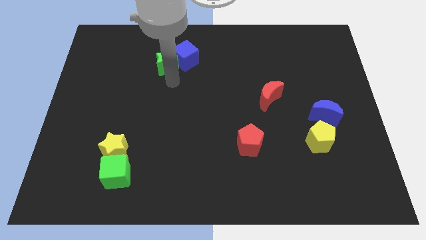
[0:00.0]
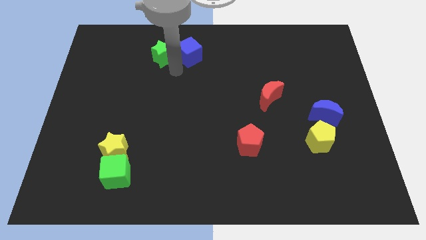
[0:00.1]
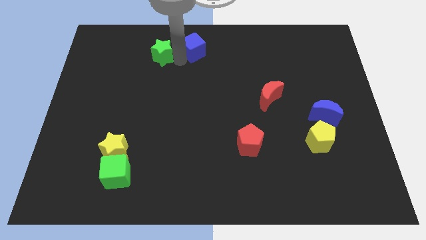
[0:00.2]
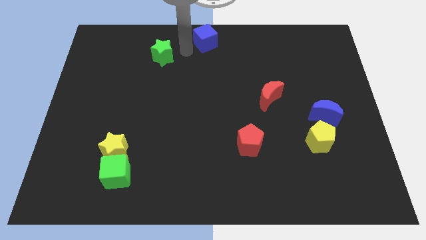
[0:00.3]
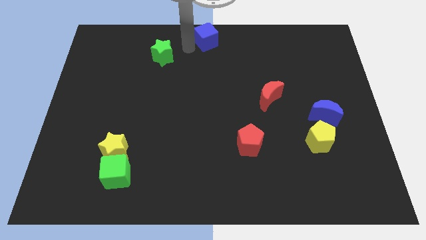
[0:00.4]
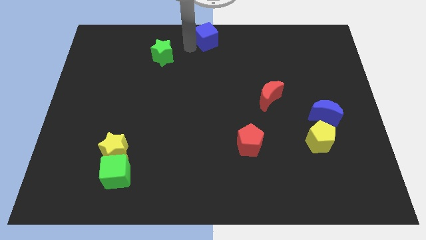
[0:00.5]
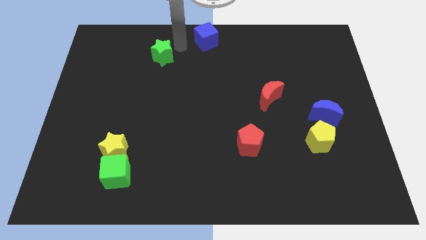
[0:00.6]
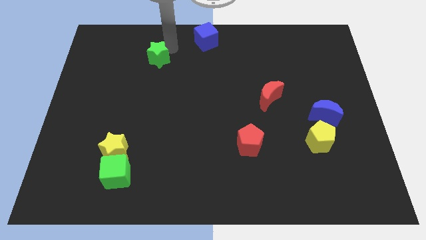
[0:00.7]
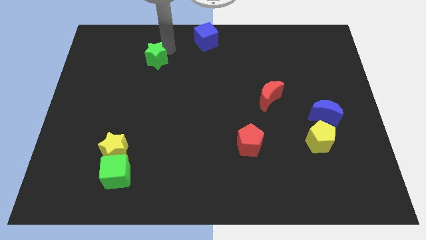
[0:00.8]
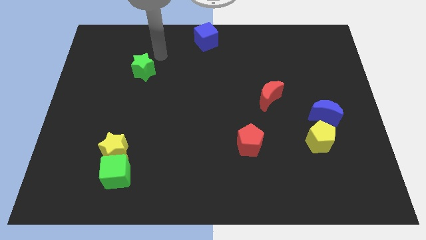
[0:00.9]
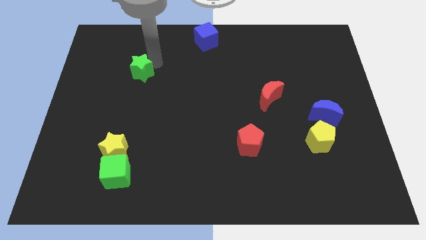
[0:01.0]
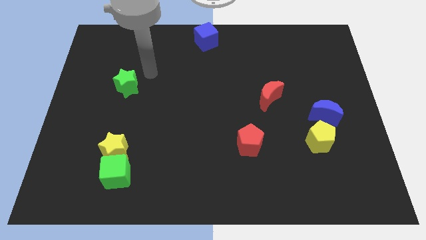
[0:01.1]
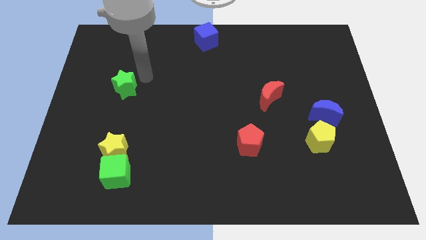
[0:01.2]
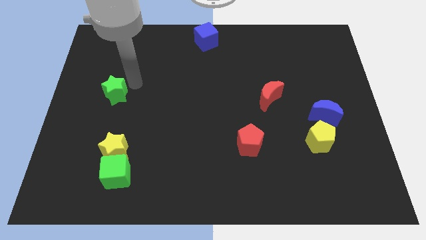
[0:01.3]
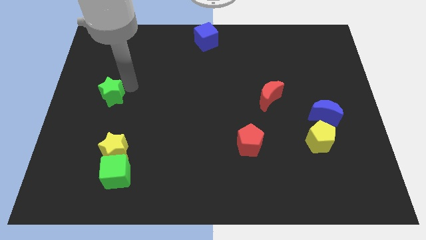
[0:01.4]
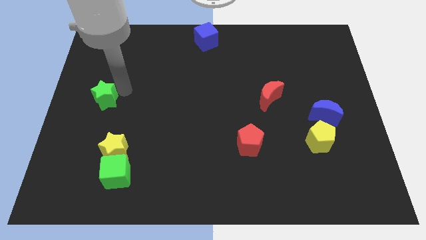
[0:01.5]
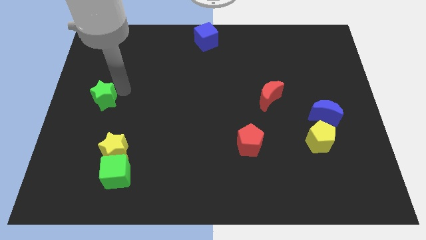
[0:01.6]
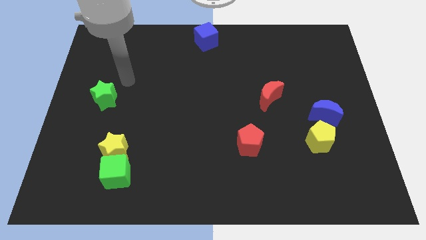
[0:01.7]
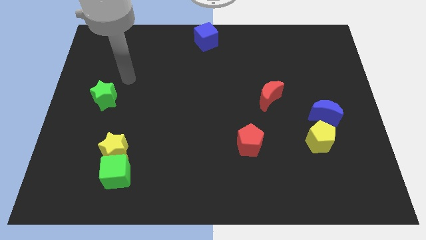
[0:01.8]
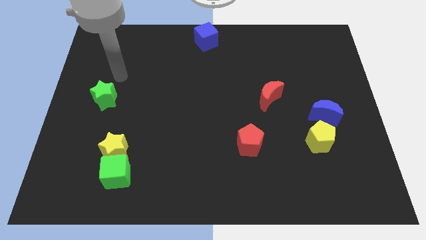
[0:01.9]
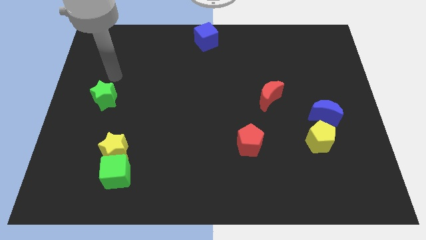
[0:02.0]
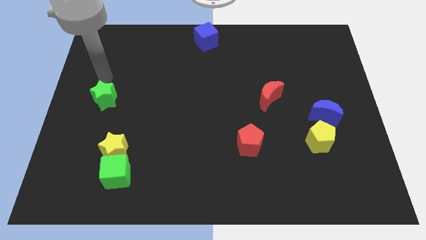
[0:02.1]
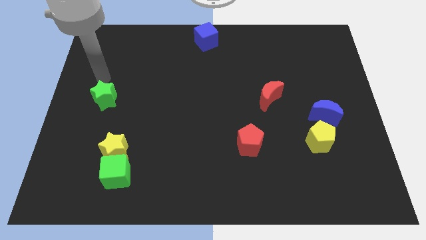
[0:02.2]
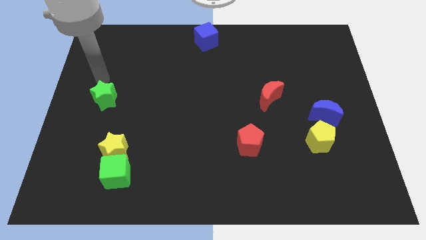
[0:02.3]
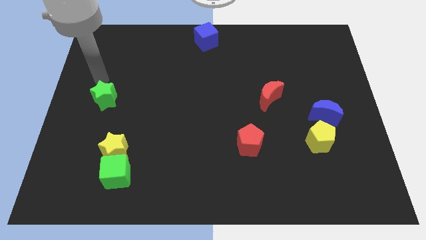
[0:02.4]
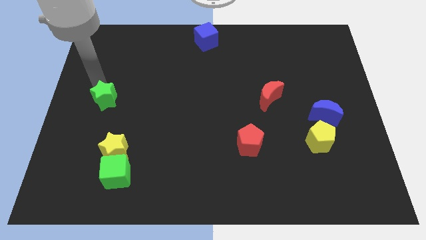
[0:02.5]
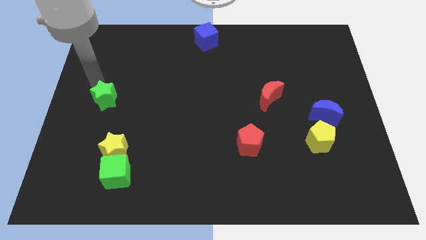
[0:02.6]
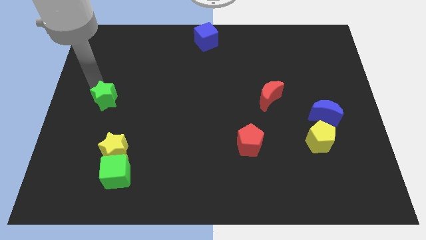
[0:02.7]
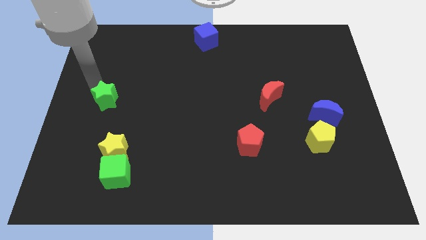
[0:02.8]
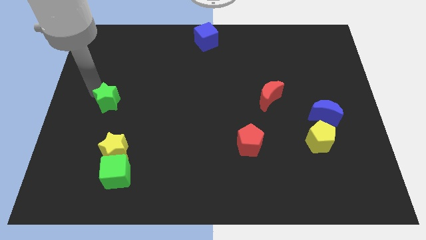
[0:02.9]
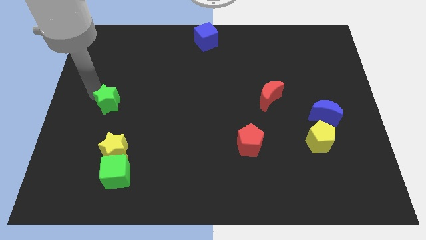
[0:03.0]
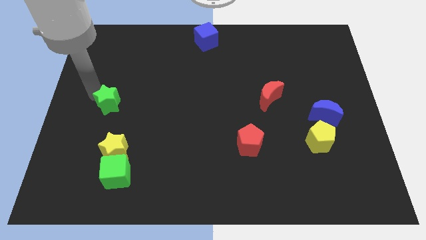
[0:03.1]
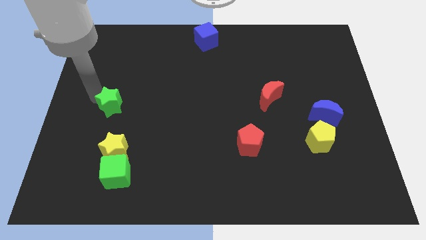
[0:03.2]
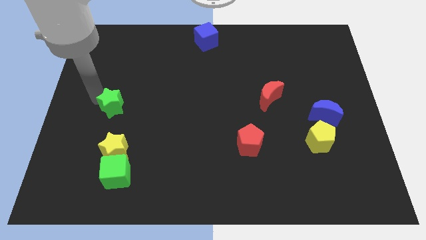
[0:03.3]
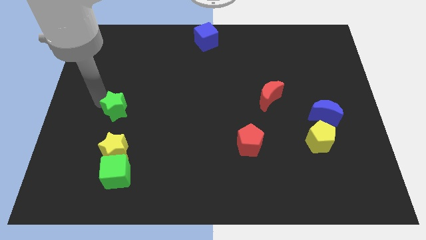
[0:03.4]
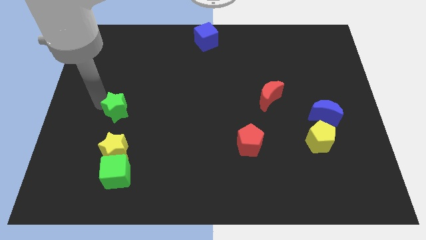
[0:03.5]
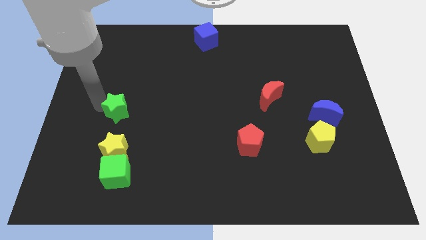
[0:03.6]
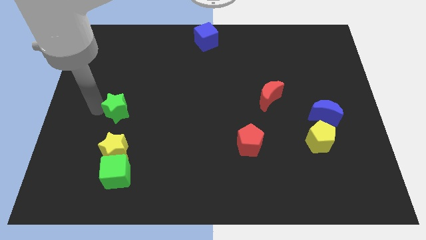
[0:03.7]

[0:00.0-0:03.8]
separate the green star from the blue cube

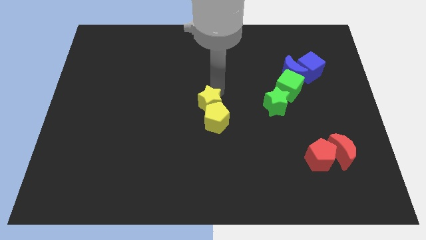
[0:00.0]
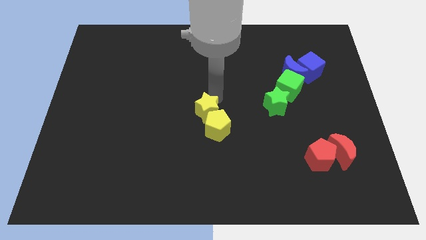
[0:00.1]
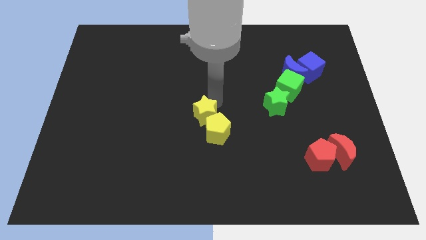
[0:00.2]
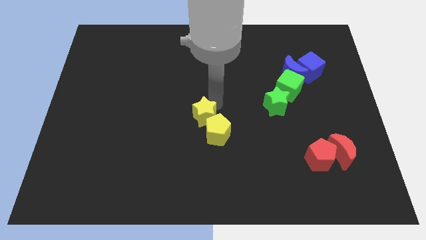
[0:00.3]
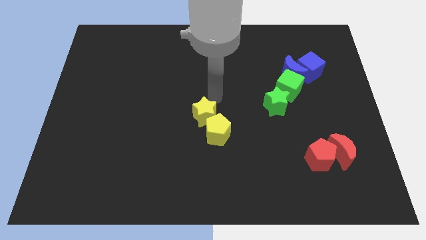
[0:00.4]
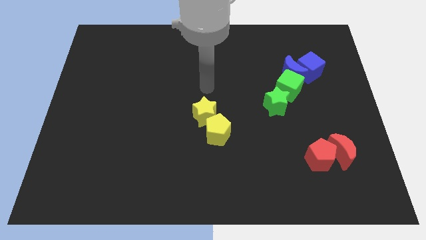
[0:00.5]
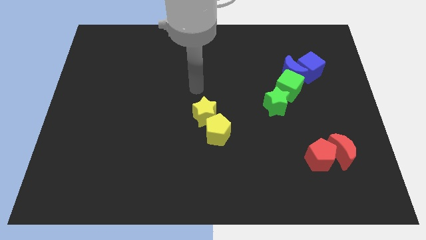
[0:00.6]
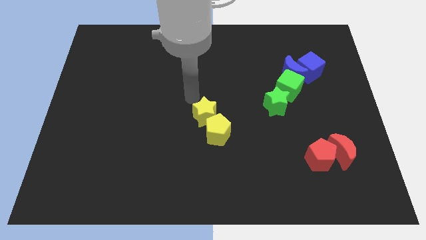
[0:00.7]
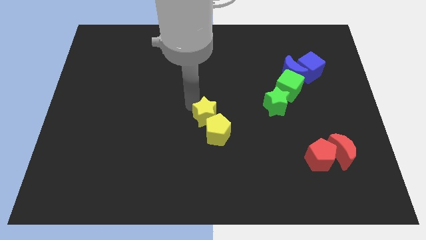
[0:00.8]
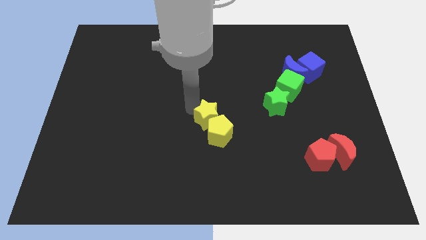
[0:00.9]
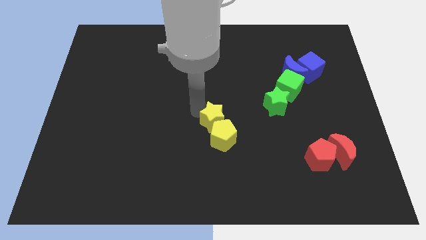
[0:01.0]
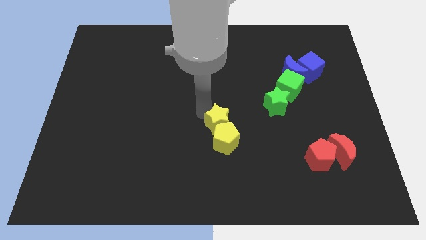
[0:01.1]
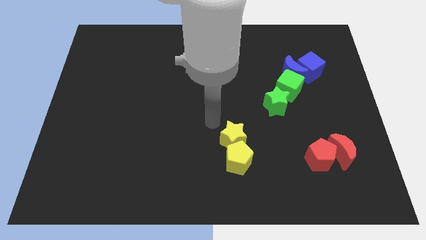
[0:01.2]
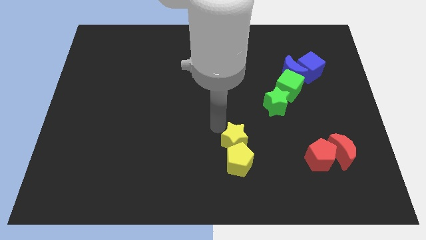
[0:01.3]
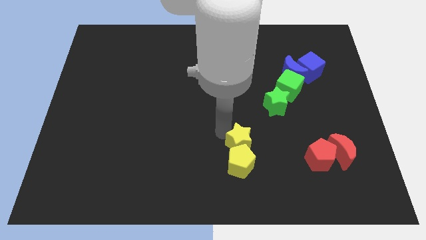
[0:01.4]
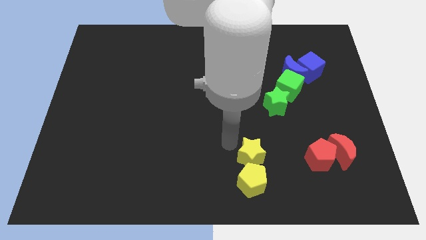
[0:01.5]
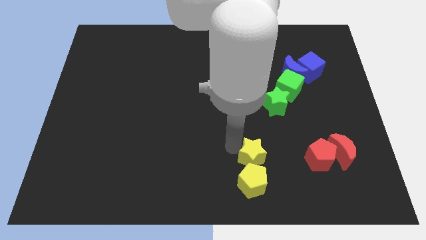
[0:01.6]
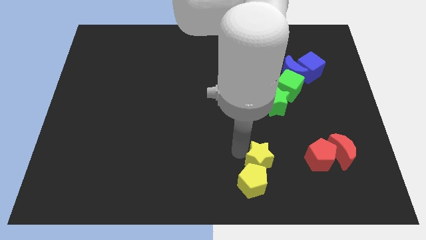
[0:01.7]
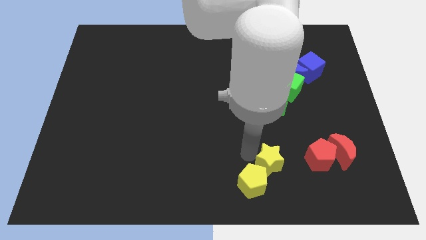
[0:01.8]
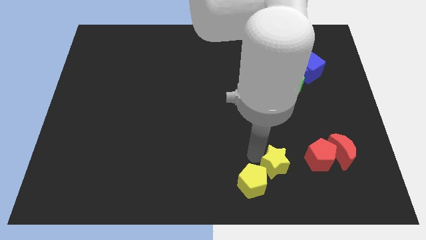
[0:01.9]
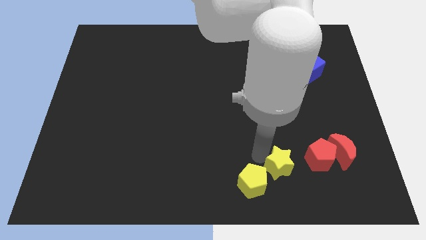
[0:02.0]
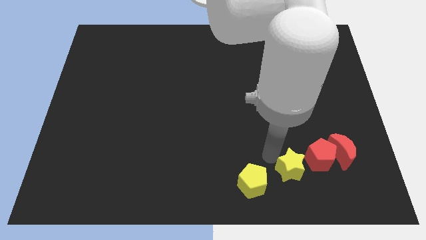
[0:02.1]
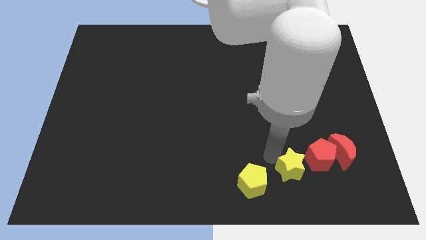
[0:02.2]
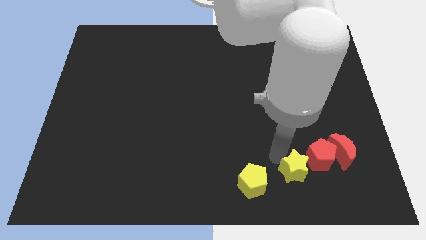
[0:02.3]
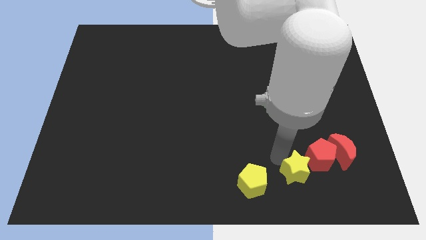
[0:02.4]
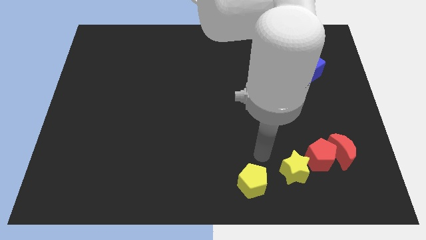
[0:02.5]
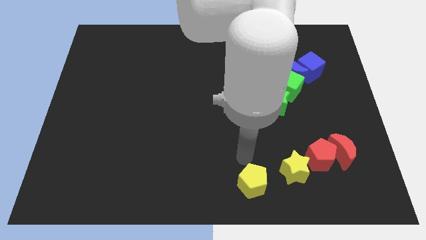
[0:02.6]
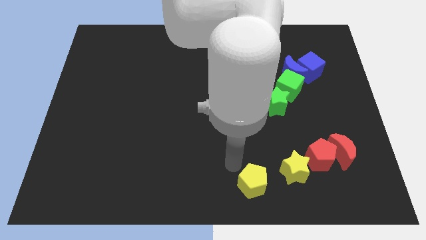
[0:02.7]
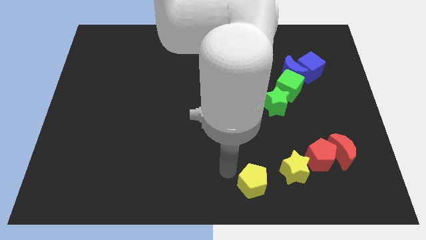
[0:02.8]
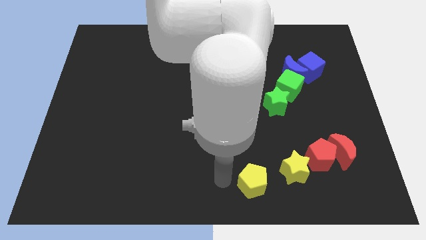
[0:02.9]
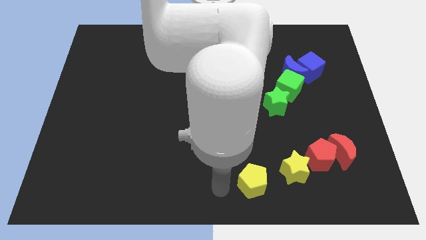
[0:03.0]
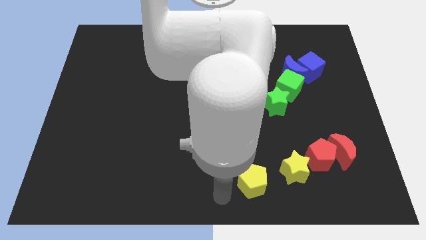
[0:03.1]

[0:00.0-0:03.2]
separate the yellow star and the yellow pentagon

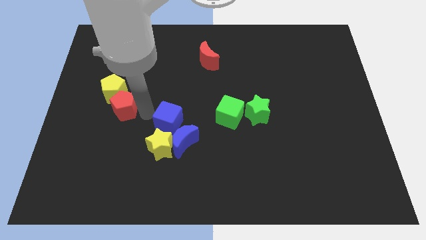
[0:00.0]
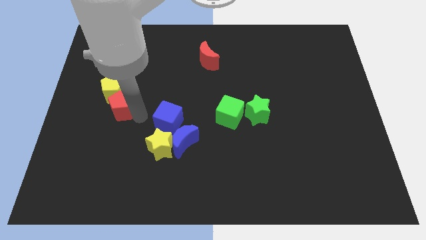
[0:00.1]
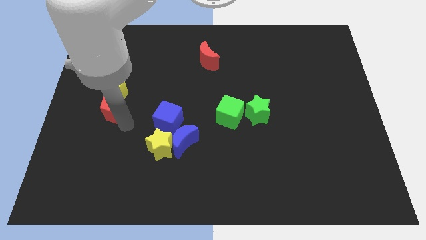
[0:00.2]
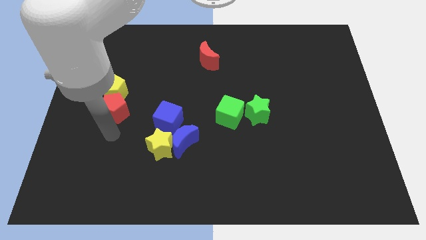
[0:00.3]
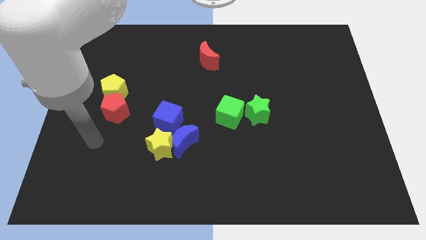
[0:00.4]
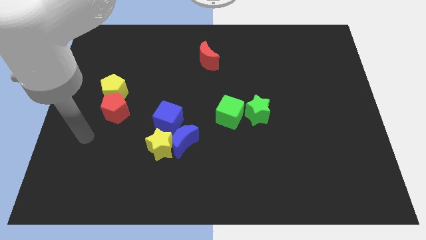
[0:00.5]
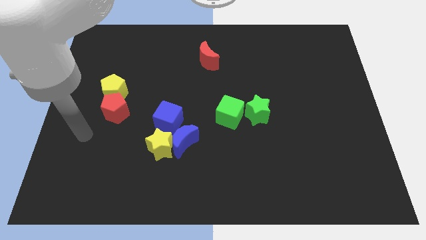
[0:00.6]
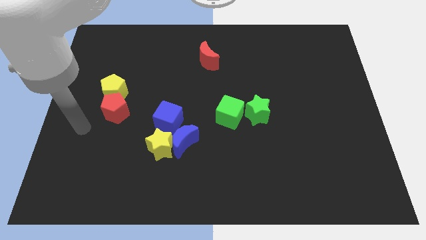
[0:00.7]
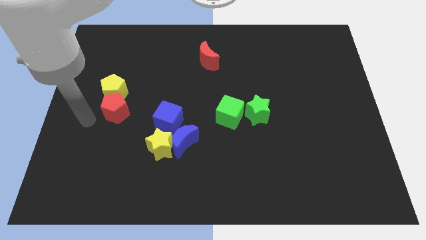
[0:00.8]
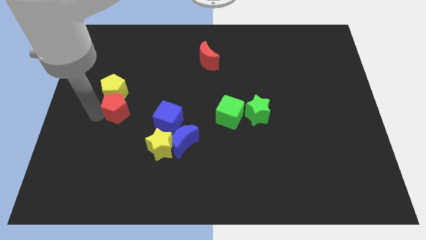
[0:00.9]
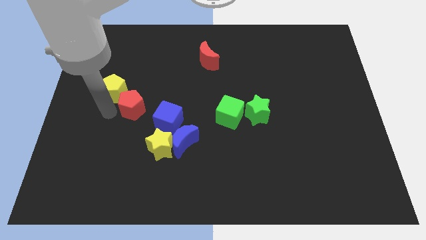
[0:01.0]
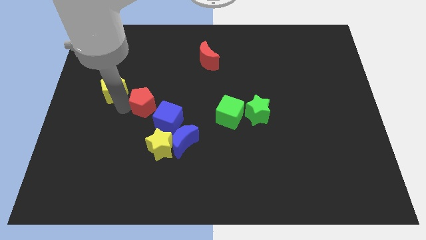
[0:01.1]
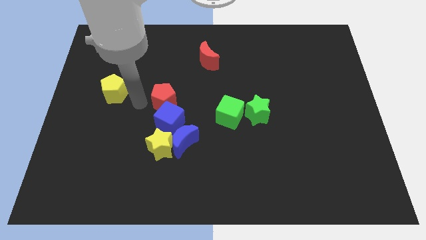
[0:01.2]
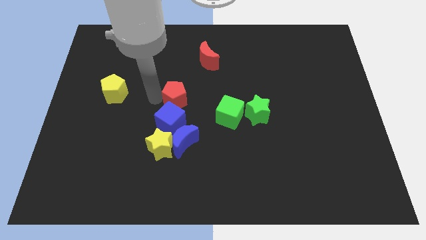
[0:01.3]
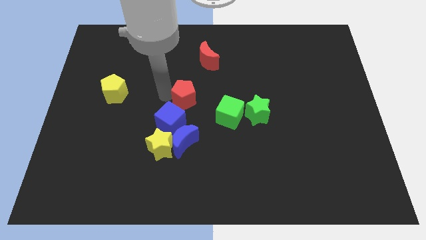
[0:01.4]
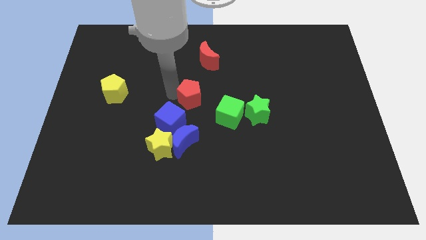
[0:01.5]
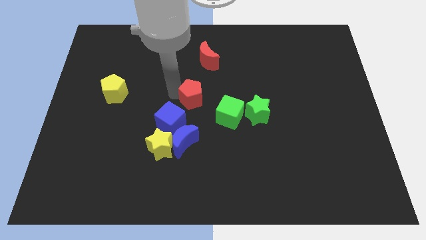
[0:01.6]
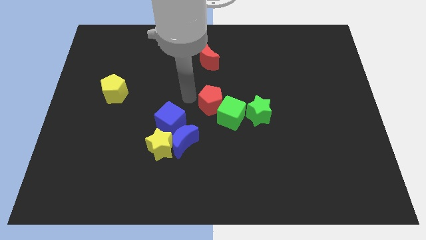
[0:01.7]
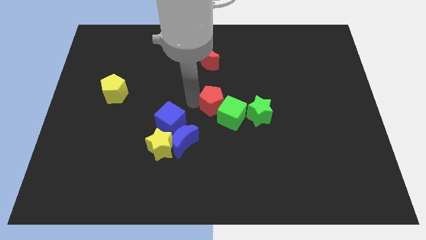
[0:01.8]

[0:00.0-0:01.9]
move the red pentagon to the left of the green cube

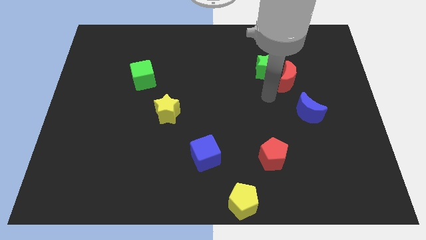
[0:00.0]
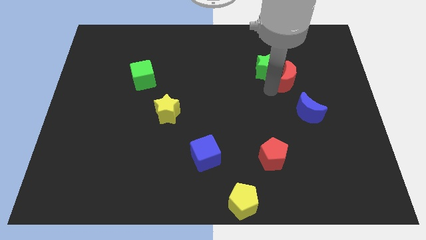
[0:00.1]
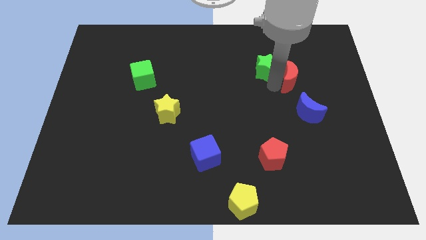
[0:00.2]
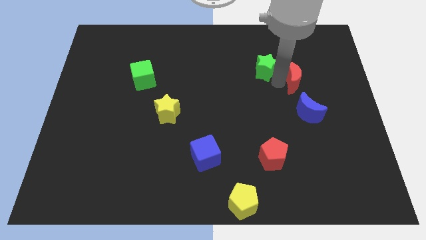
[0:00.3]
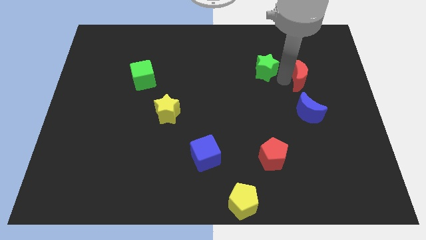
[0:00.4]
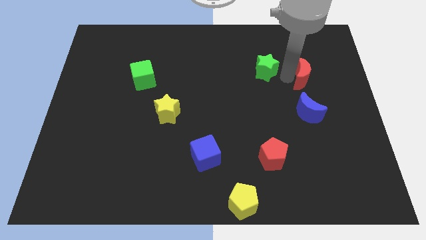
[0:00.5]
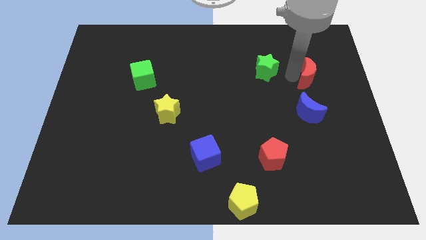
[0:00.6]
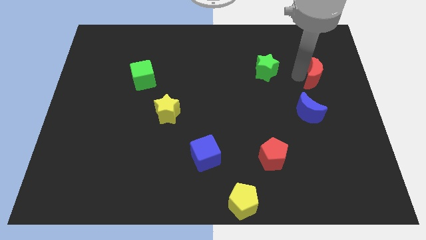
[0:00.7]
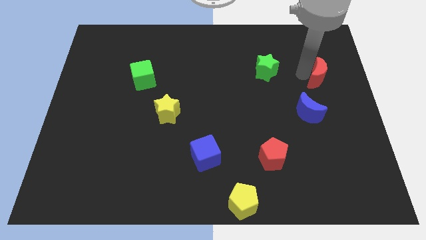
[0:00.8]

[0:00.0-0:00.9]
move the red crescent away from the green star
